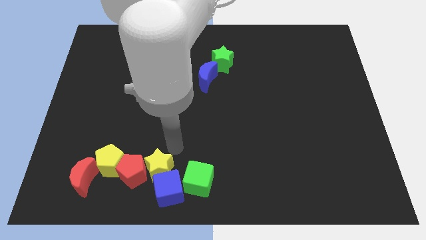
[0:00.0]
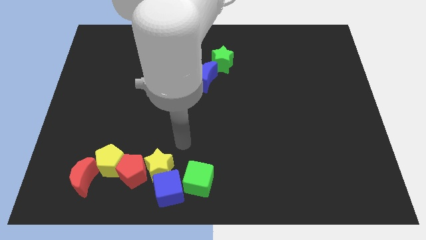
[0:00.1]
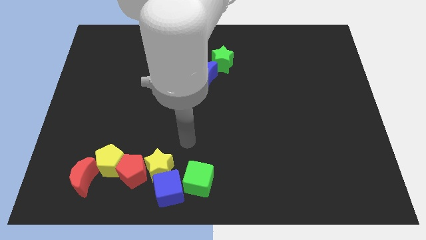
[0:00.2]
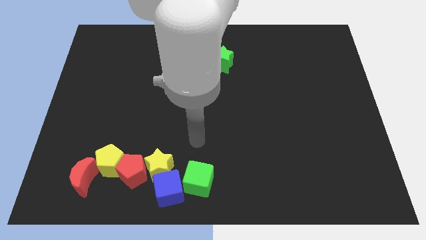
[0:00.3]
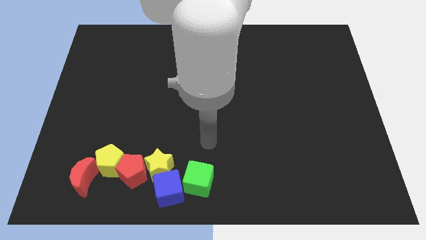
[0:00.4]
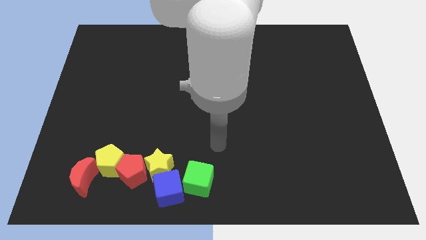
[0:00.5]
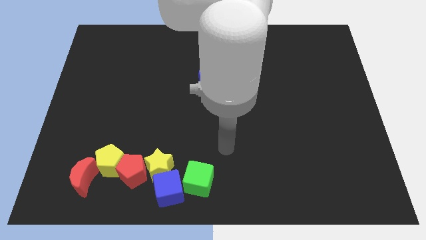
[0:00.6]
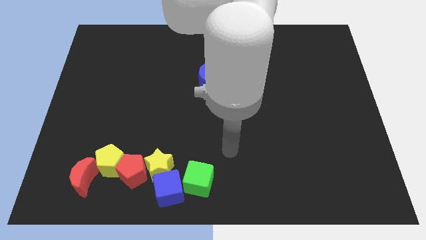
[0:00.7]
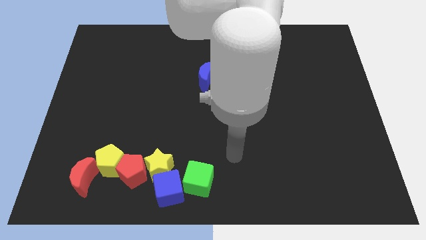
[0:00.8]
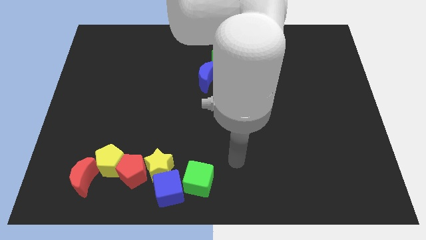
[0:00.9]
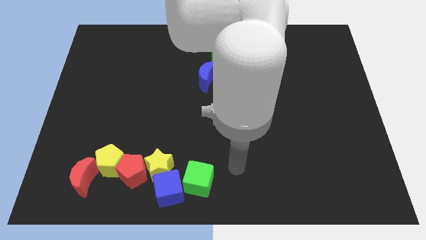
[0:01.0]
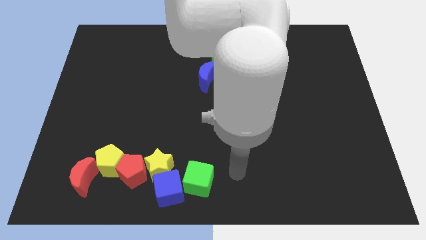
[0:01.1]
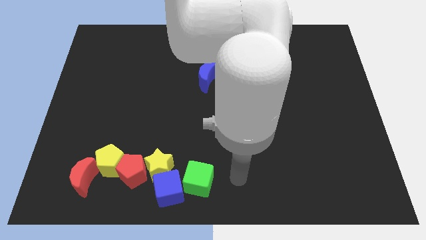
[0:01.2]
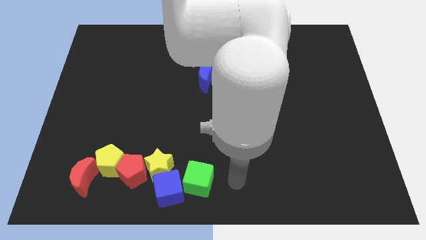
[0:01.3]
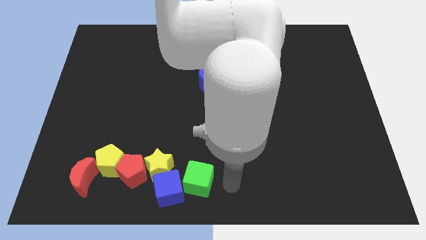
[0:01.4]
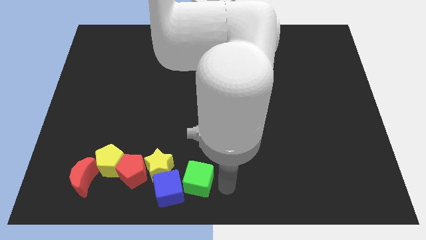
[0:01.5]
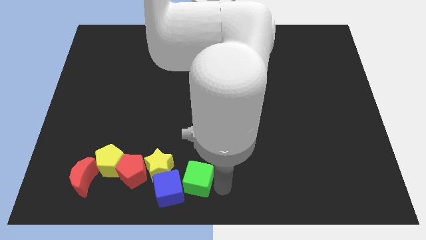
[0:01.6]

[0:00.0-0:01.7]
move the arm to the right side of the green cube

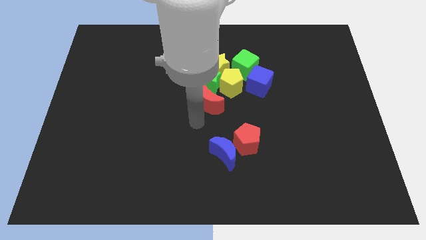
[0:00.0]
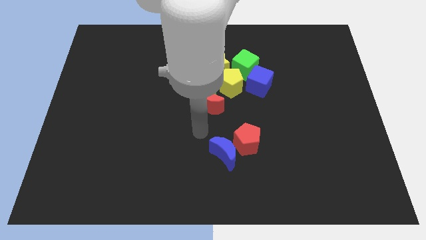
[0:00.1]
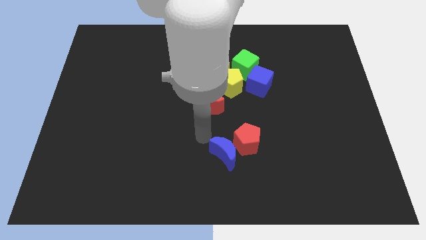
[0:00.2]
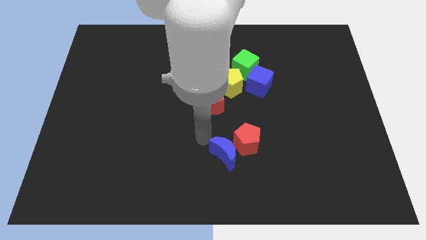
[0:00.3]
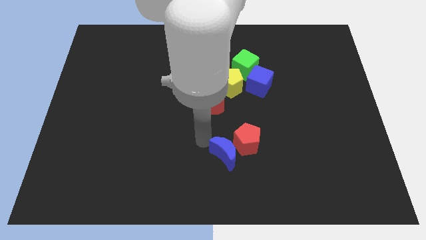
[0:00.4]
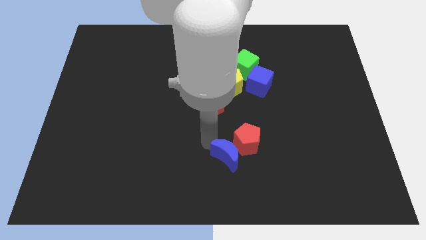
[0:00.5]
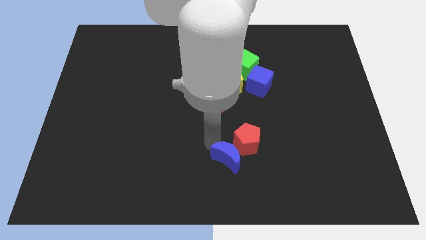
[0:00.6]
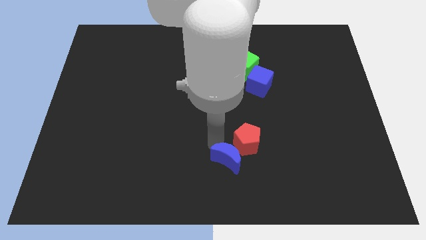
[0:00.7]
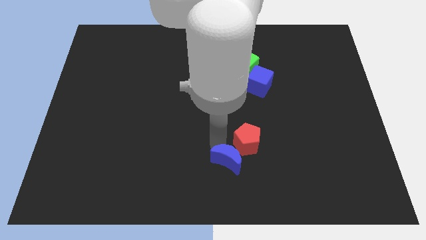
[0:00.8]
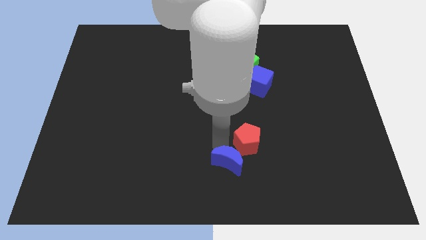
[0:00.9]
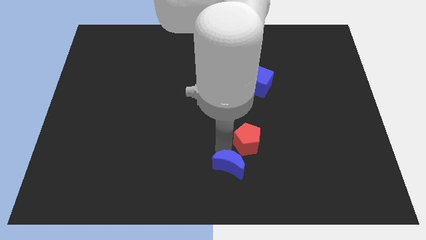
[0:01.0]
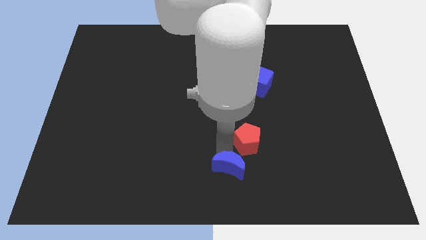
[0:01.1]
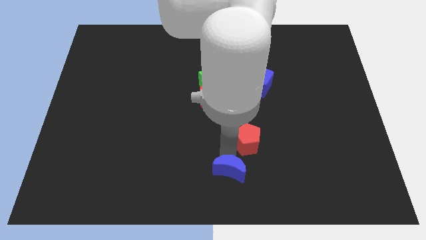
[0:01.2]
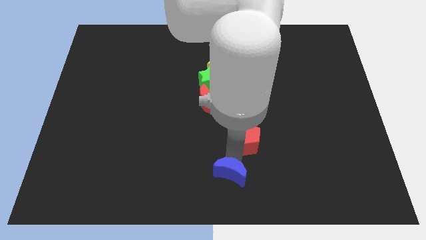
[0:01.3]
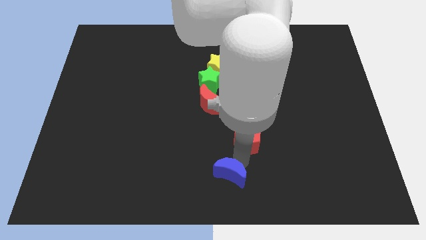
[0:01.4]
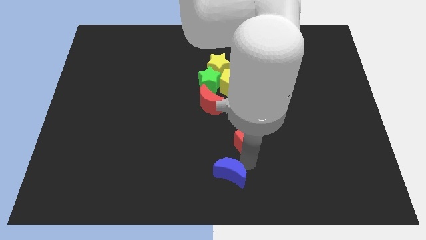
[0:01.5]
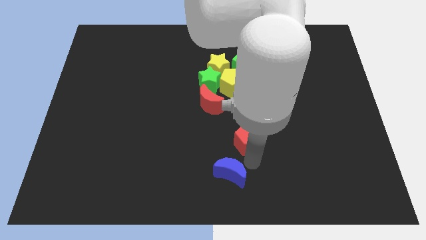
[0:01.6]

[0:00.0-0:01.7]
separate the blue crescent from the red pentagon

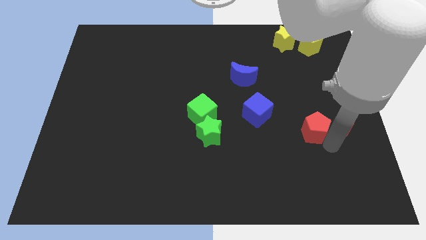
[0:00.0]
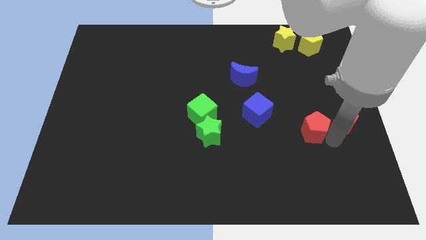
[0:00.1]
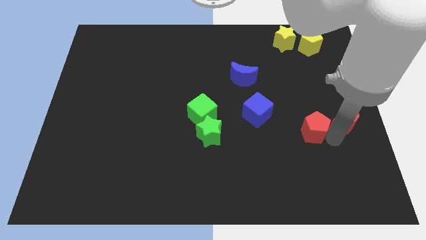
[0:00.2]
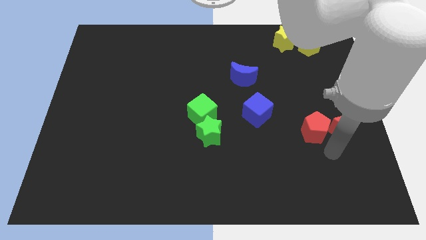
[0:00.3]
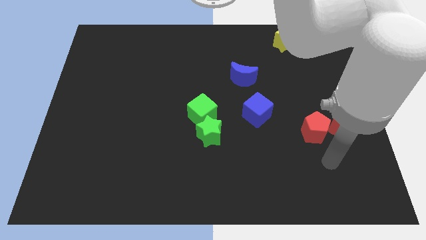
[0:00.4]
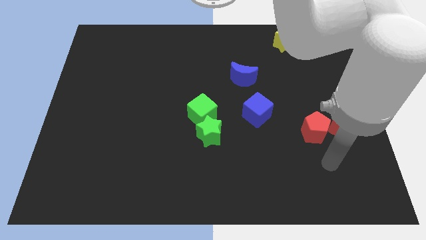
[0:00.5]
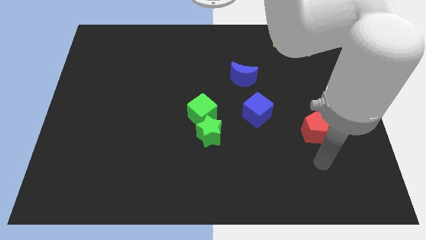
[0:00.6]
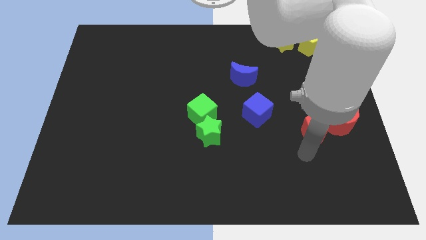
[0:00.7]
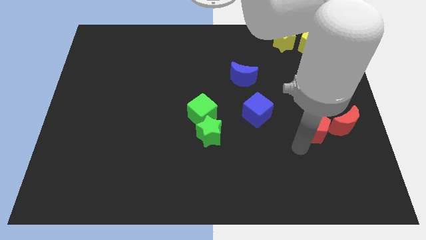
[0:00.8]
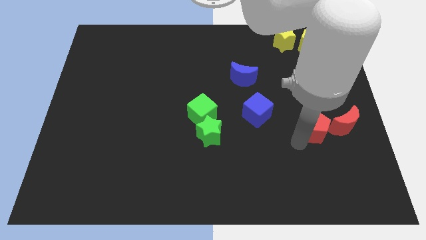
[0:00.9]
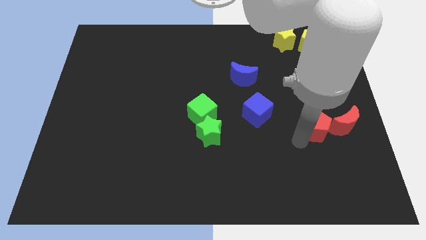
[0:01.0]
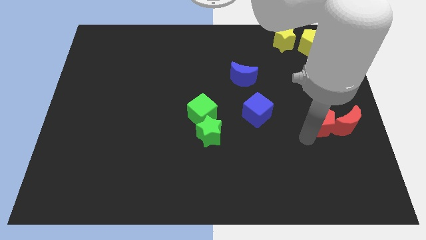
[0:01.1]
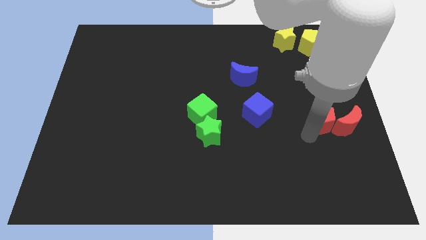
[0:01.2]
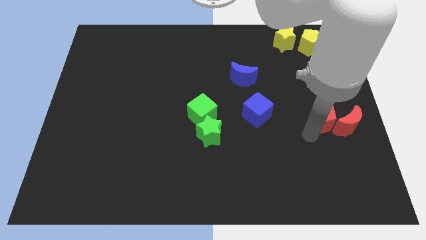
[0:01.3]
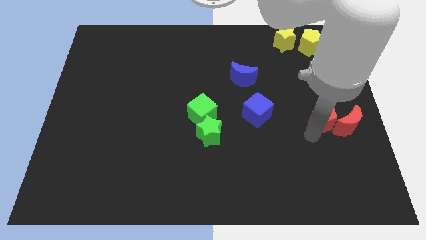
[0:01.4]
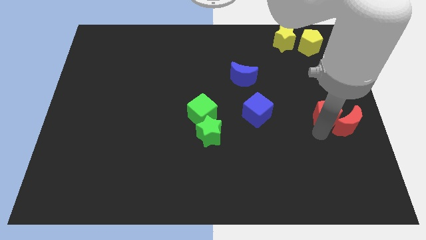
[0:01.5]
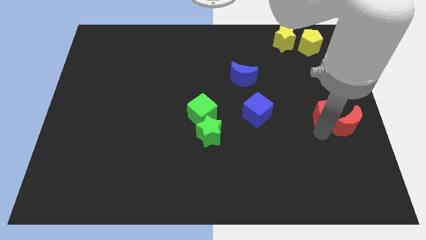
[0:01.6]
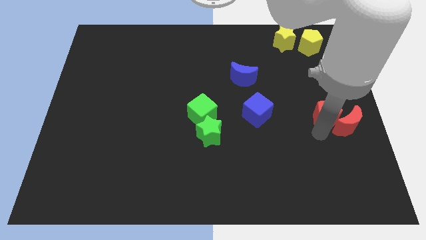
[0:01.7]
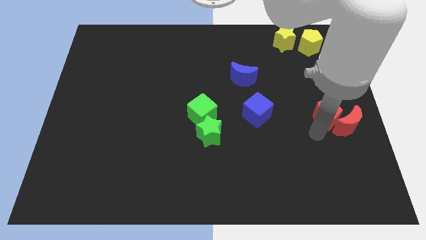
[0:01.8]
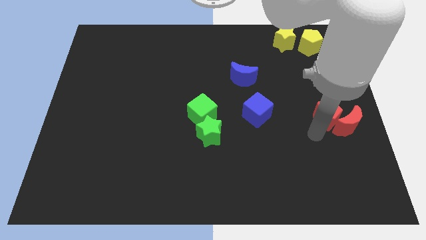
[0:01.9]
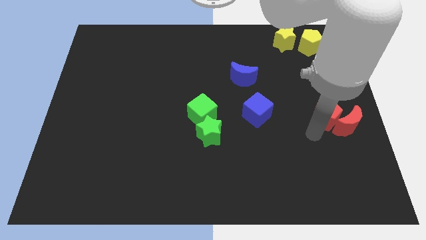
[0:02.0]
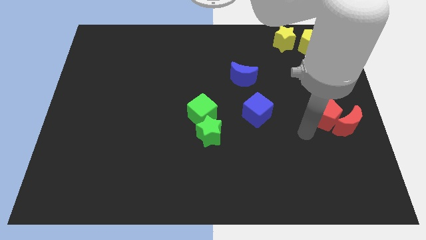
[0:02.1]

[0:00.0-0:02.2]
push the red blocks to the center right

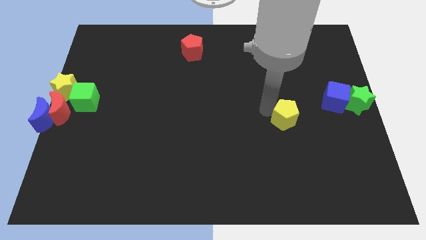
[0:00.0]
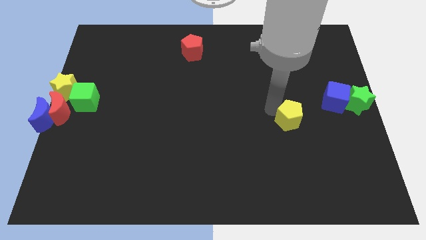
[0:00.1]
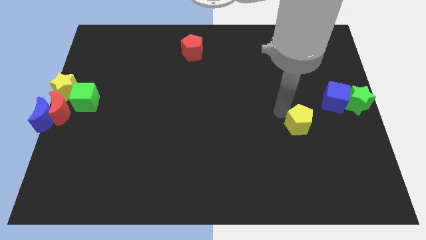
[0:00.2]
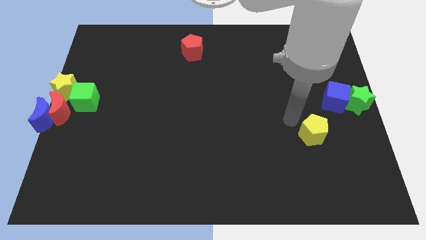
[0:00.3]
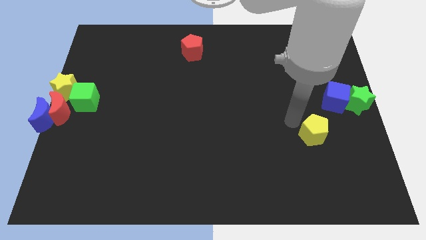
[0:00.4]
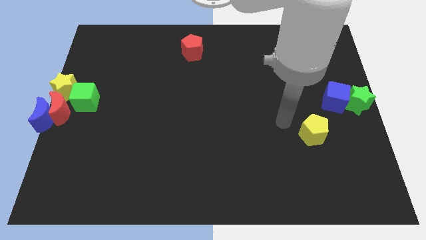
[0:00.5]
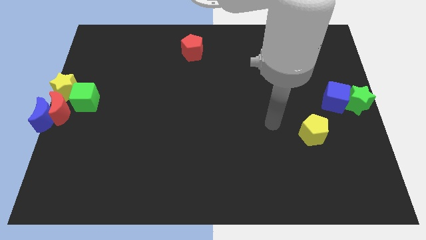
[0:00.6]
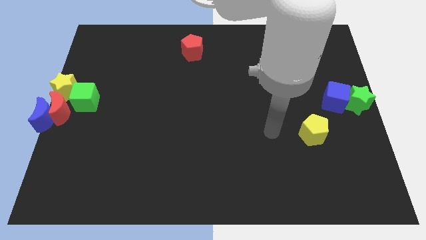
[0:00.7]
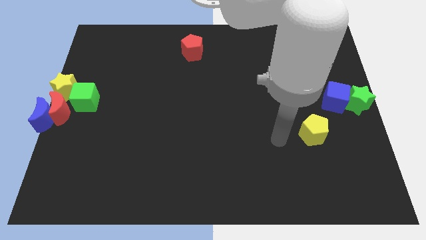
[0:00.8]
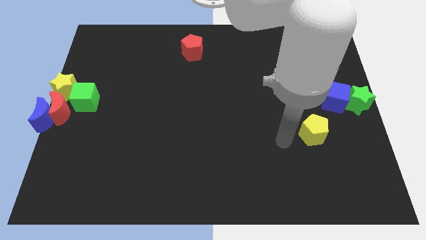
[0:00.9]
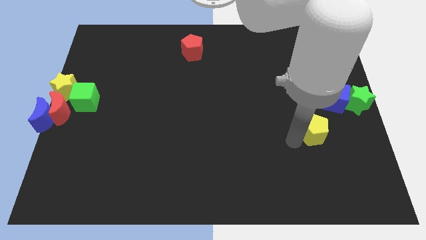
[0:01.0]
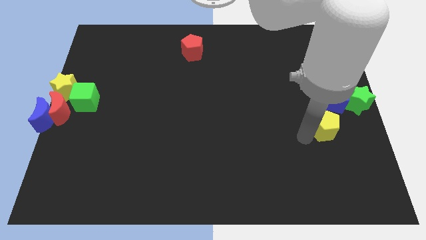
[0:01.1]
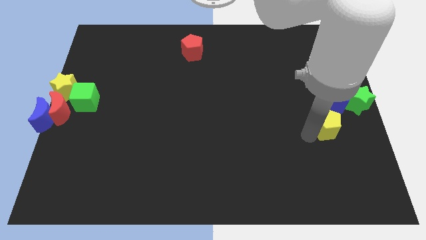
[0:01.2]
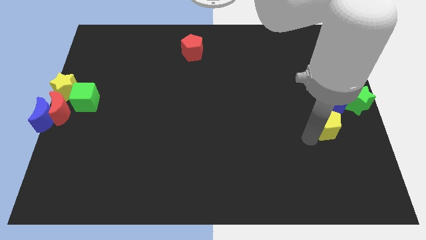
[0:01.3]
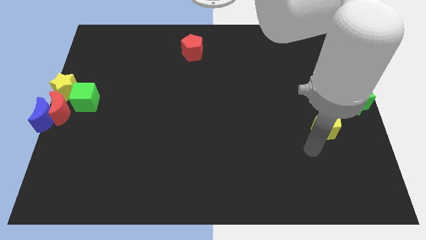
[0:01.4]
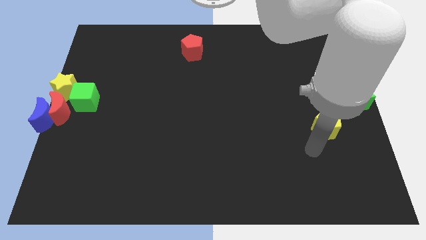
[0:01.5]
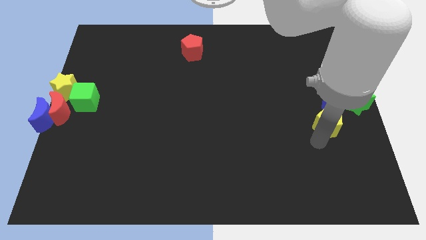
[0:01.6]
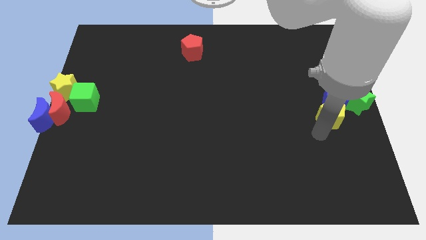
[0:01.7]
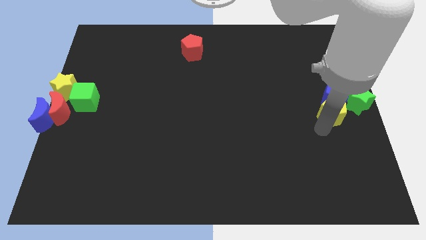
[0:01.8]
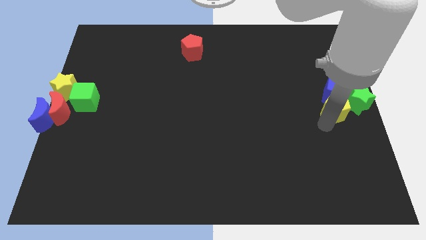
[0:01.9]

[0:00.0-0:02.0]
push the yellow pentagon to the bottom side of the blue cube

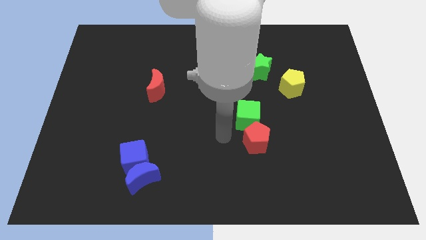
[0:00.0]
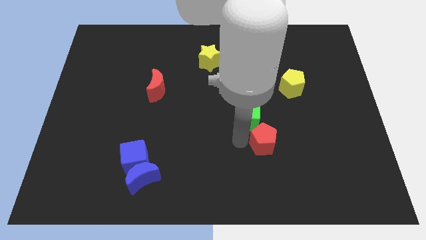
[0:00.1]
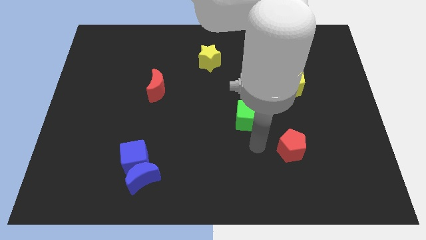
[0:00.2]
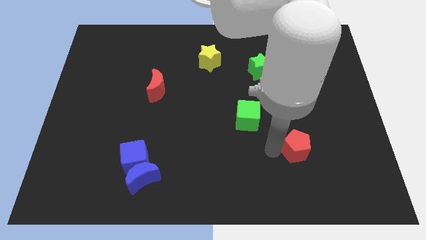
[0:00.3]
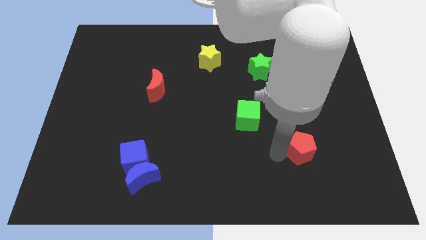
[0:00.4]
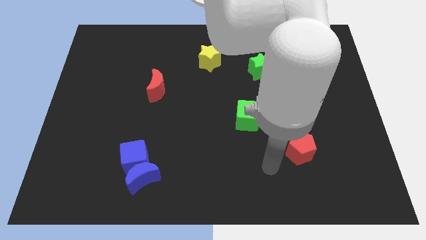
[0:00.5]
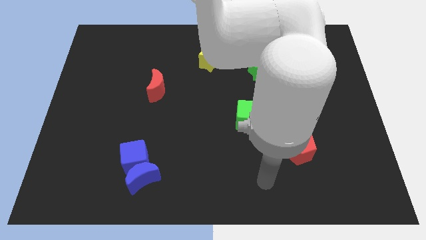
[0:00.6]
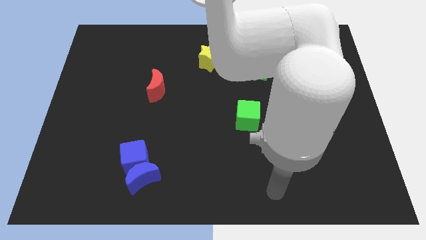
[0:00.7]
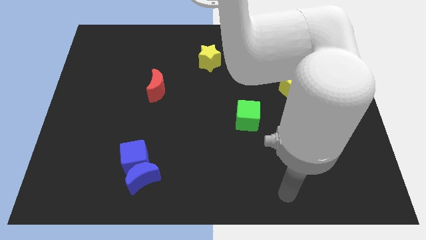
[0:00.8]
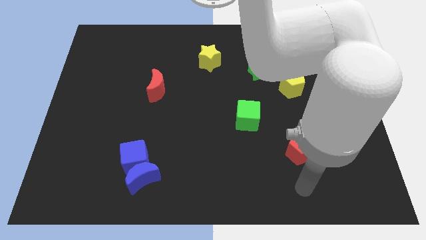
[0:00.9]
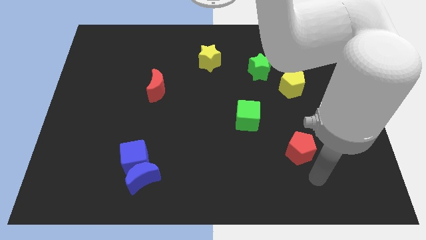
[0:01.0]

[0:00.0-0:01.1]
separate the red pentagon from the green cube
